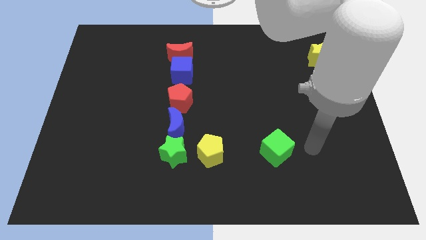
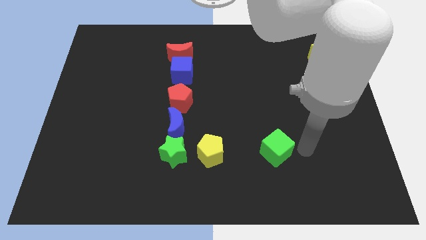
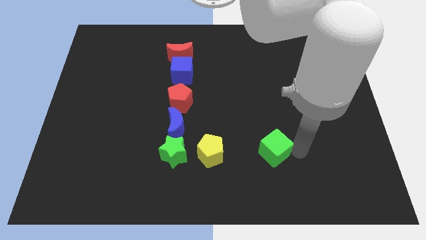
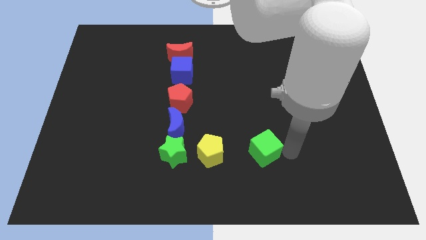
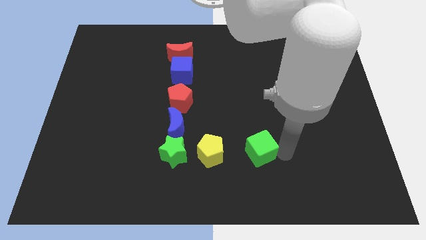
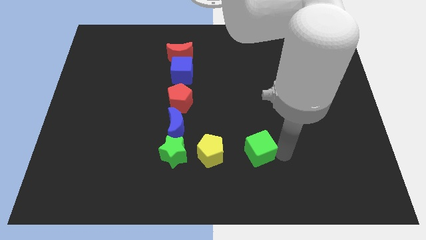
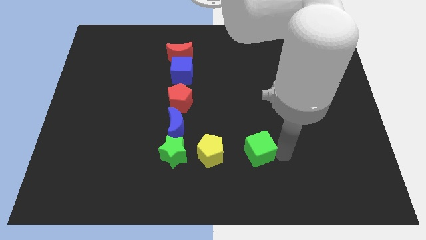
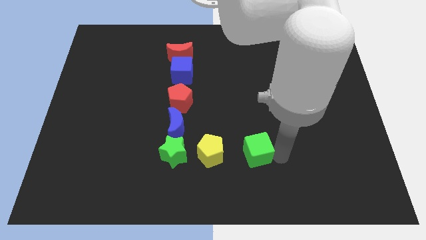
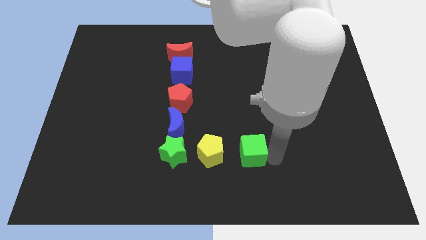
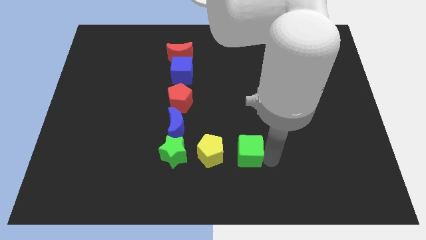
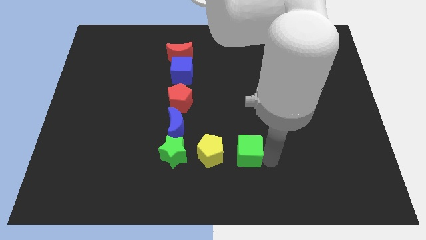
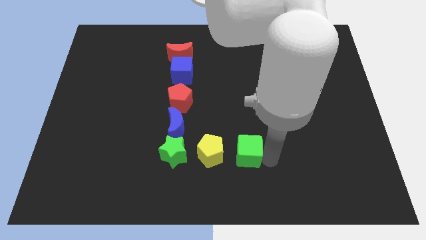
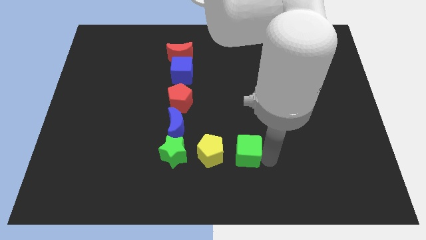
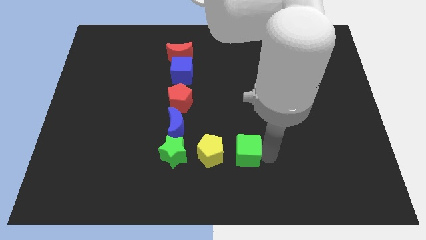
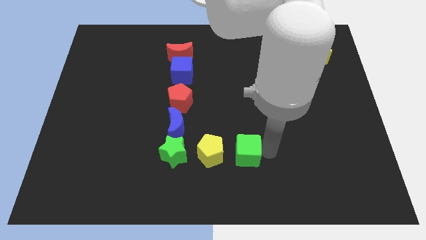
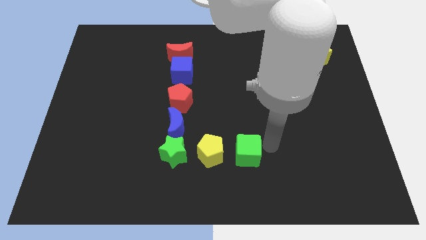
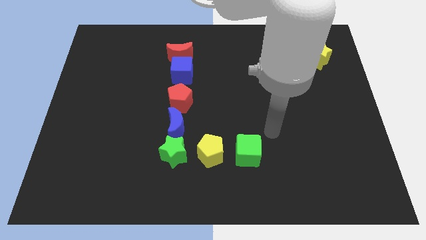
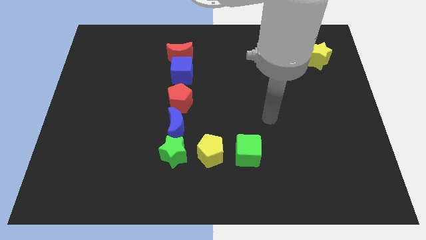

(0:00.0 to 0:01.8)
push the green cube to the right side of the yellow pentagon

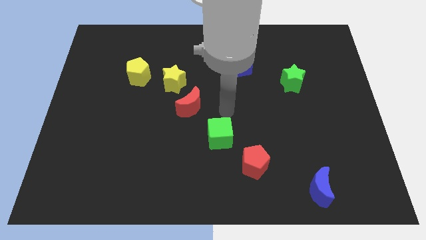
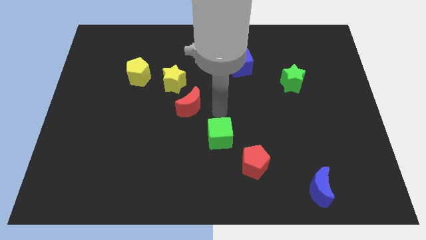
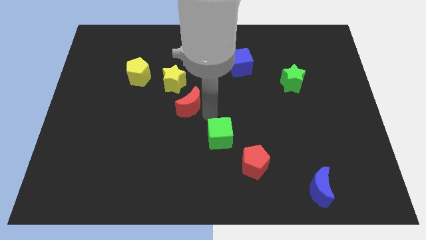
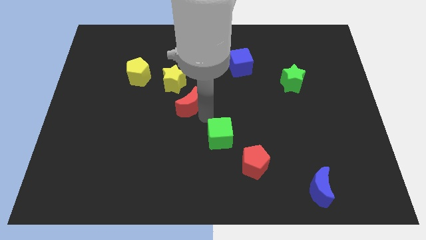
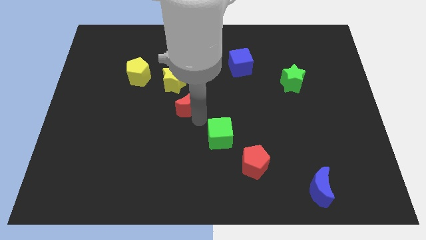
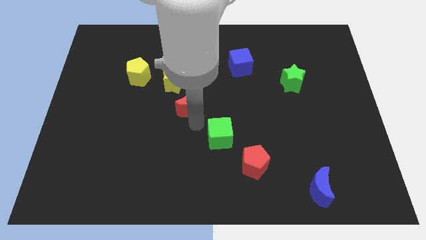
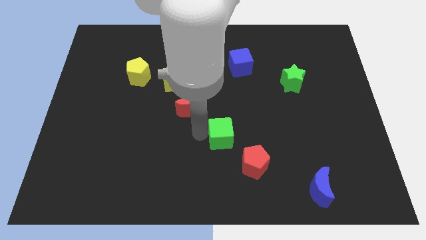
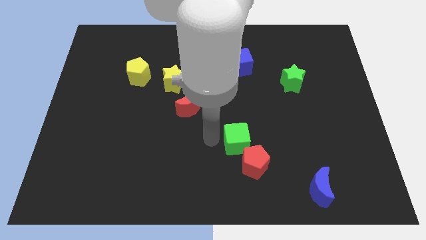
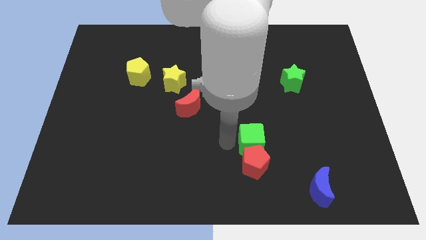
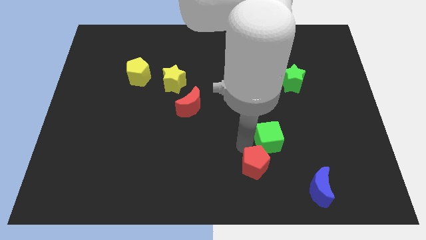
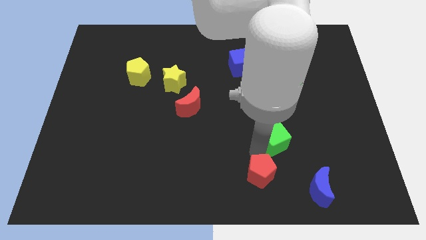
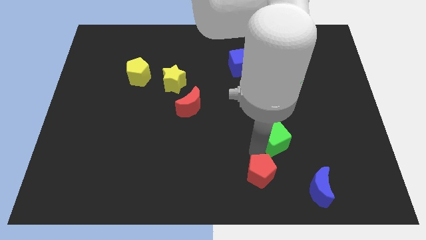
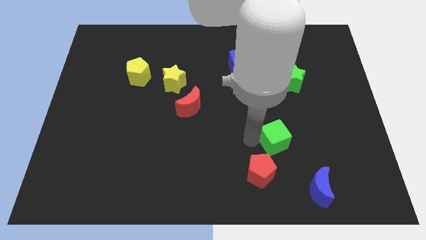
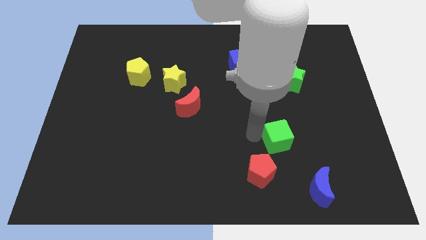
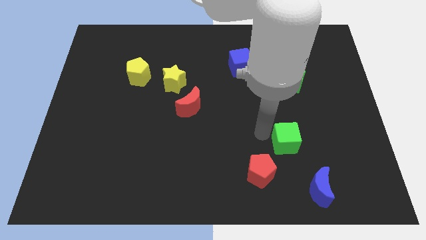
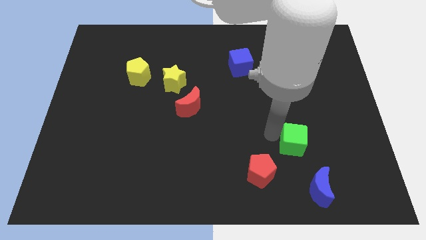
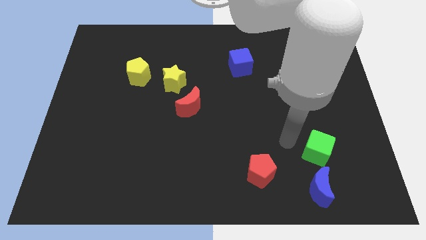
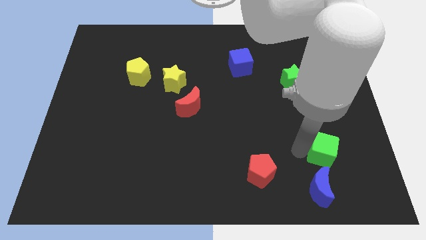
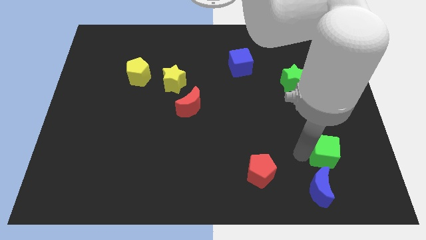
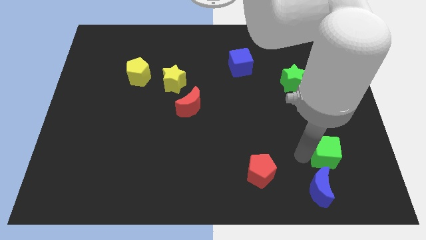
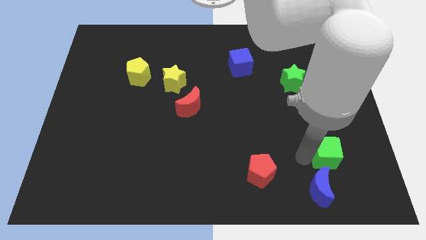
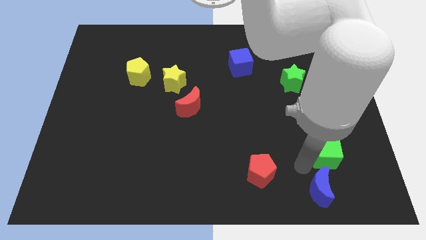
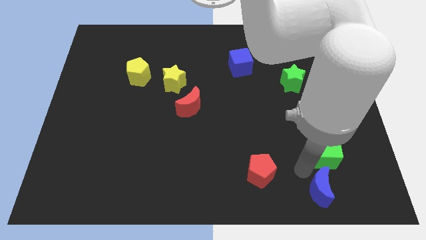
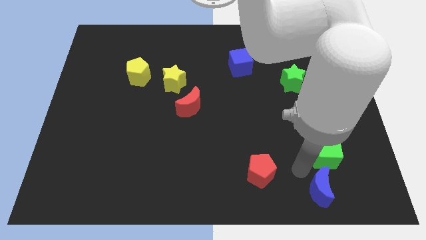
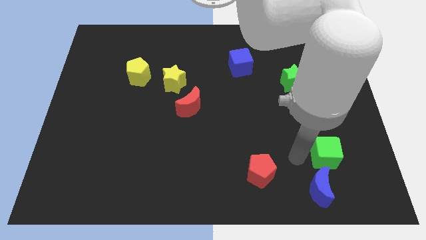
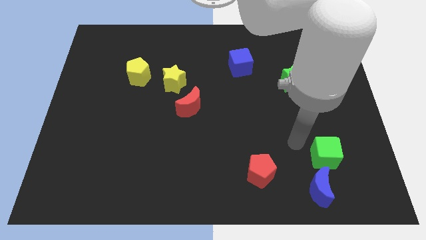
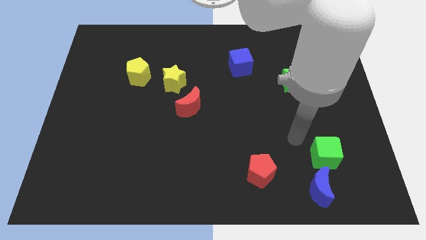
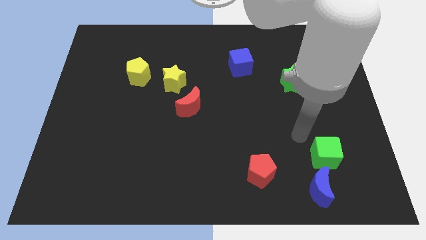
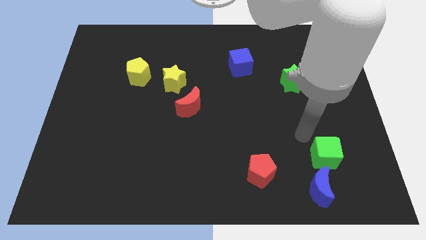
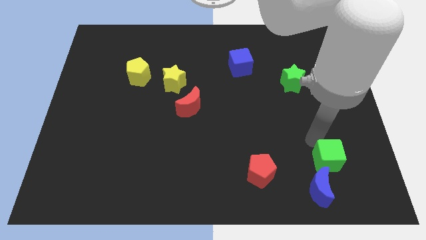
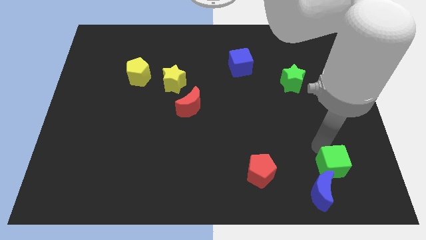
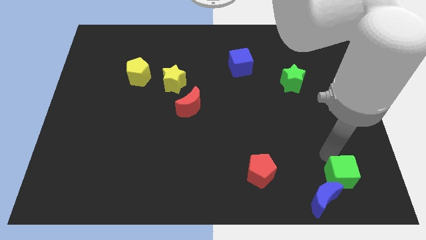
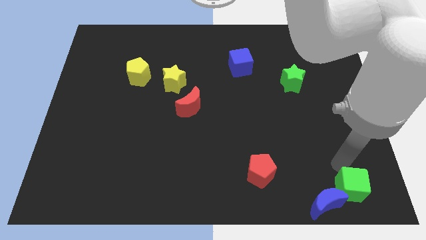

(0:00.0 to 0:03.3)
push the green cube to the top right of the blue moon

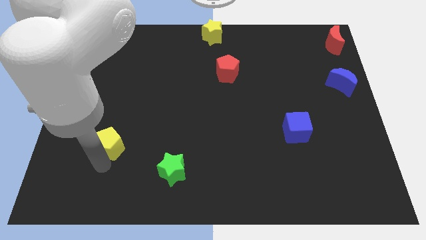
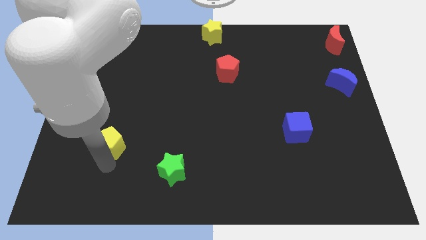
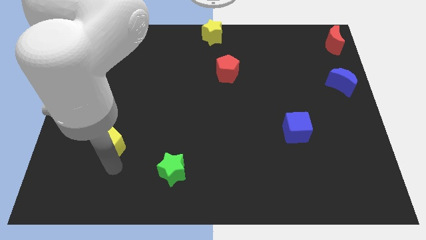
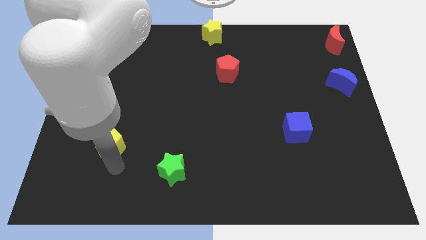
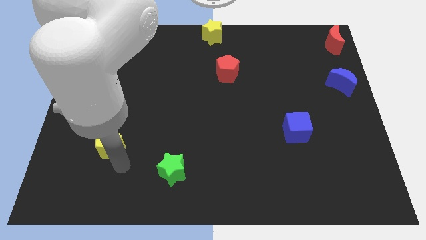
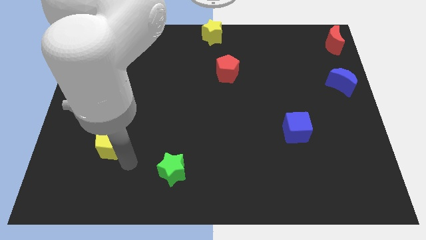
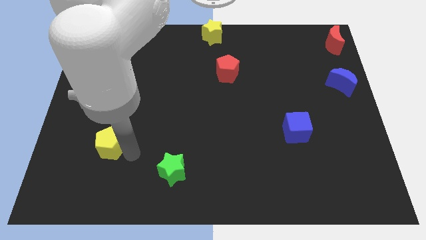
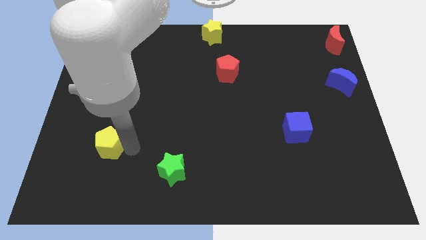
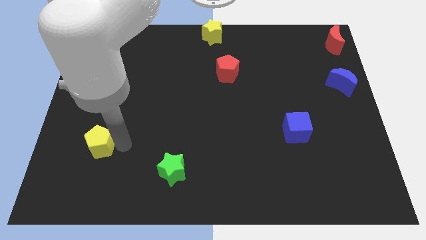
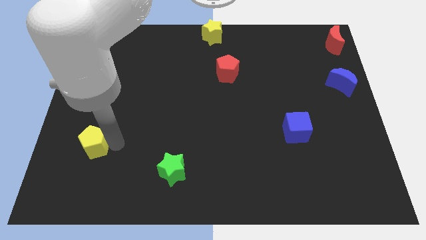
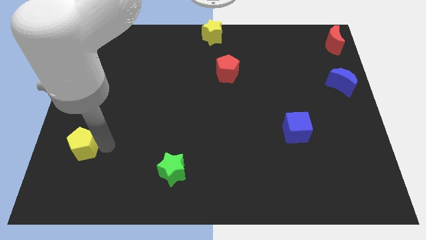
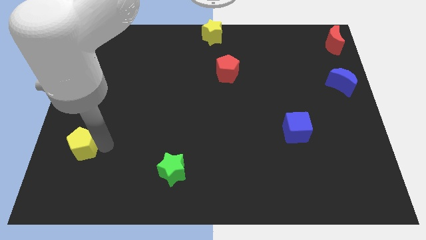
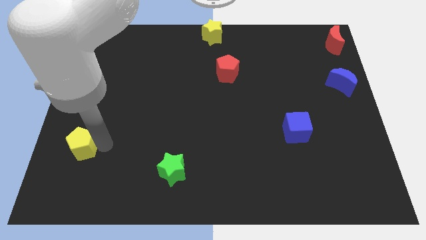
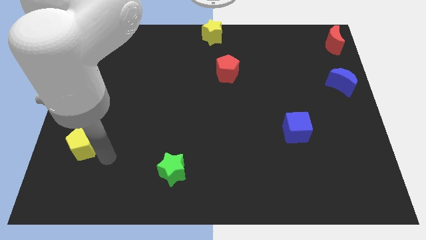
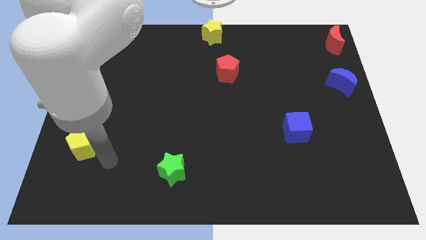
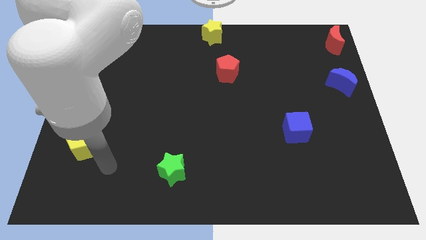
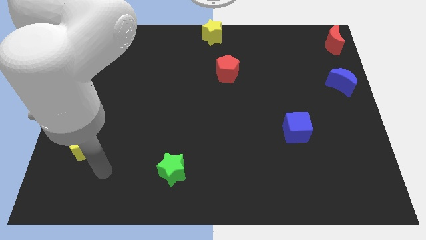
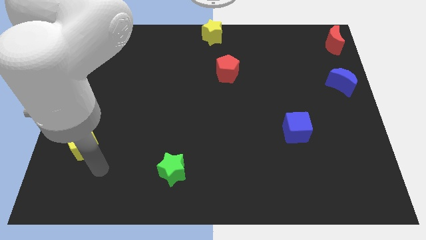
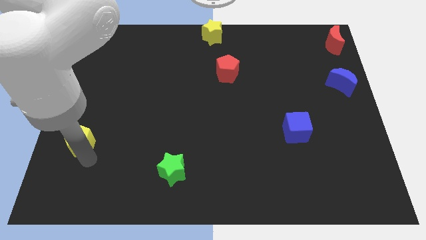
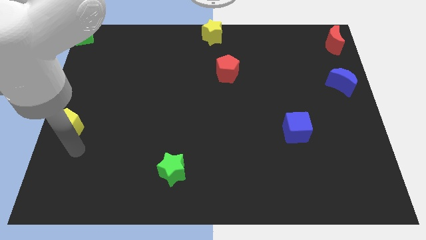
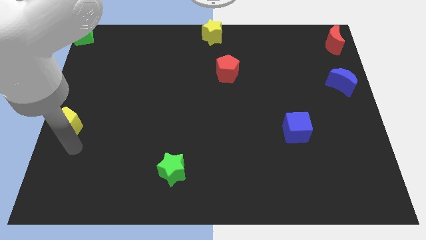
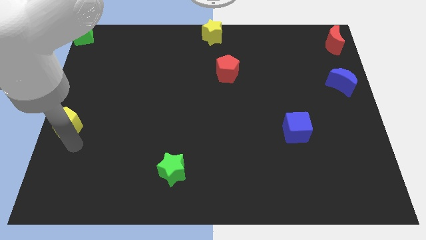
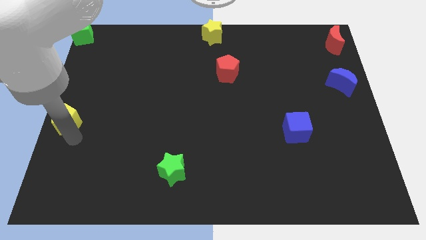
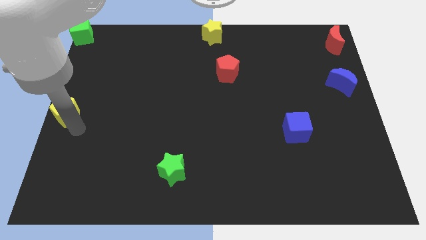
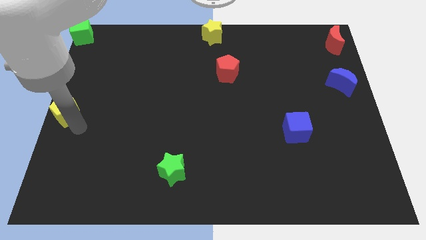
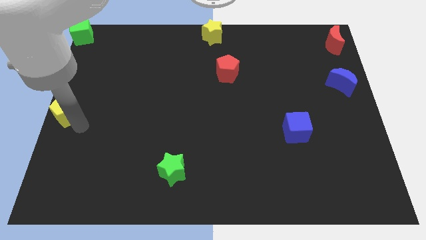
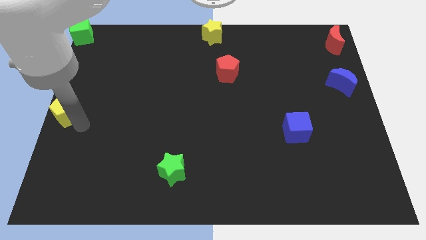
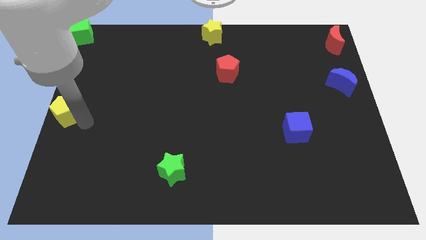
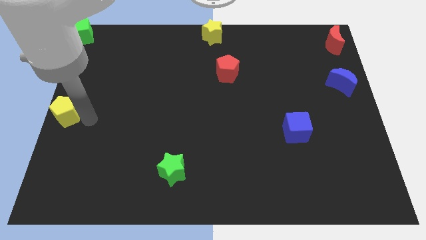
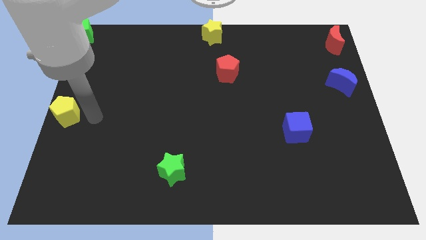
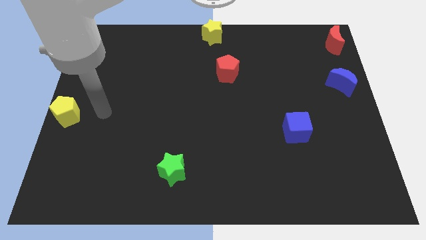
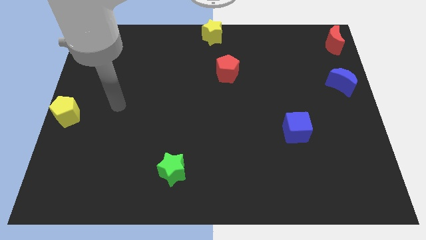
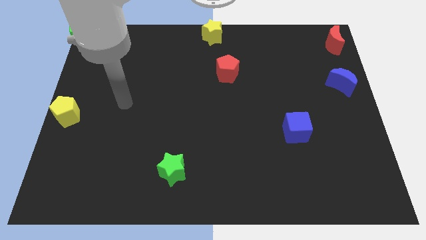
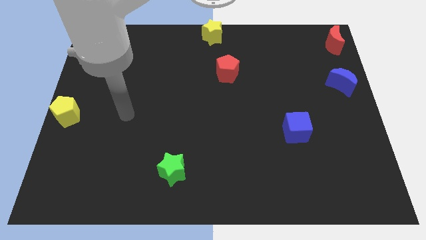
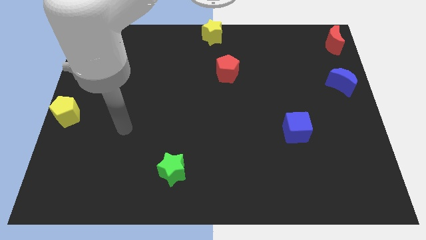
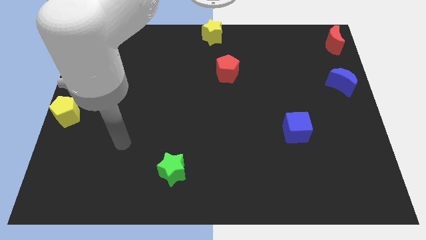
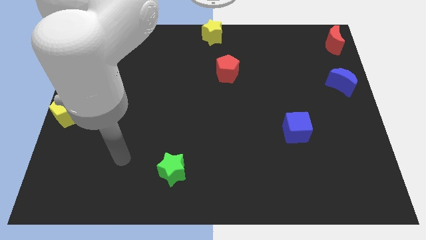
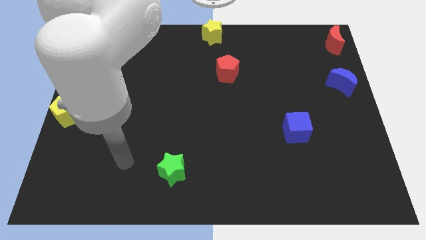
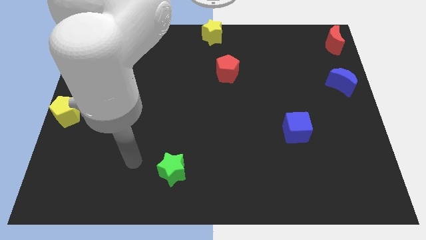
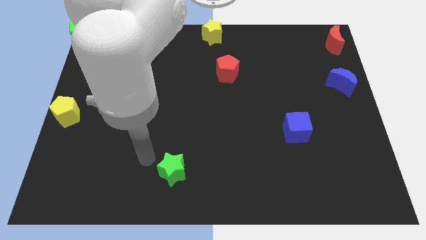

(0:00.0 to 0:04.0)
place the yellow pentagon to the left center of the board
